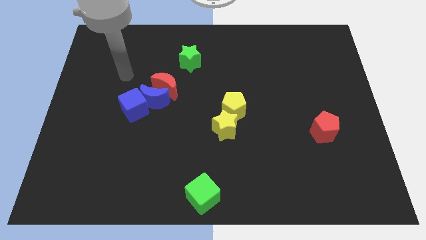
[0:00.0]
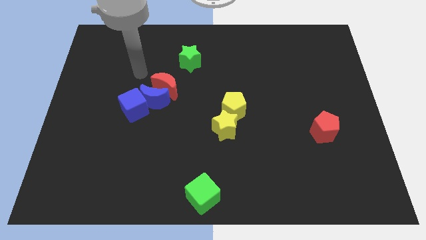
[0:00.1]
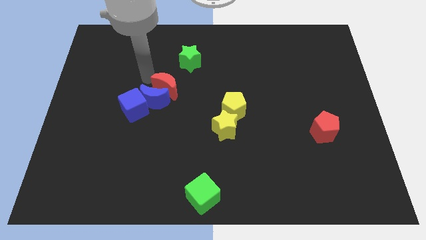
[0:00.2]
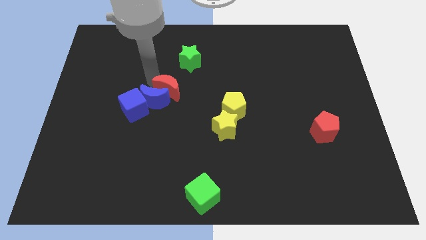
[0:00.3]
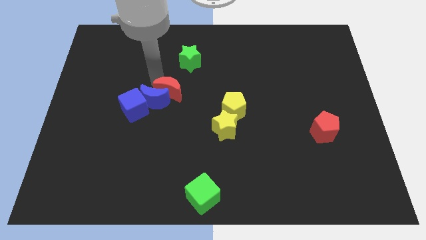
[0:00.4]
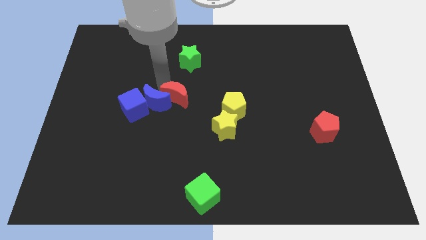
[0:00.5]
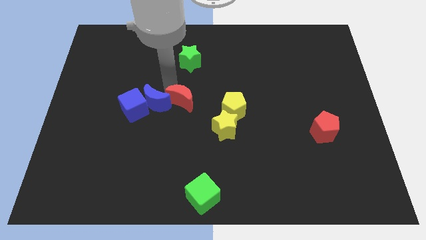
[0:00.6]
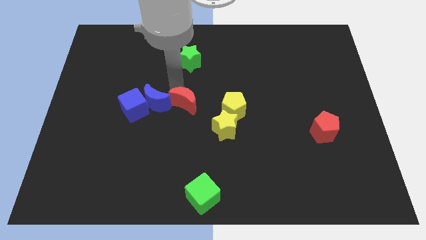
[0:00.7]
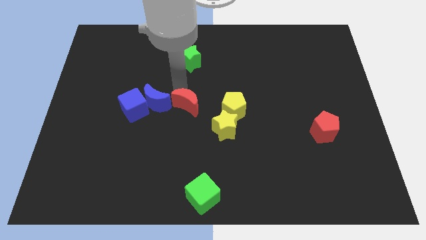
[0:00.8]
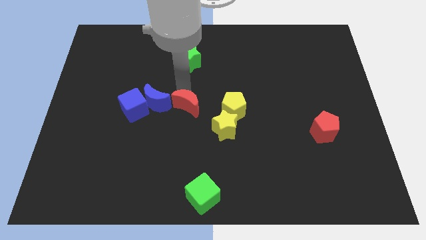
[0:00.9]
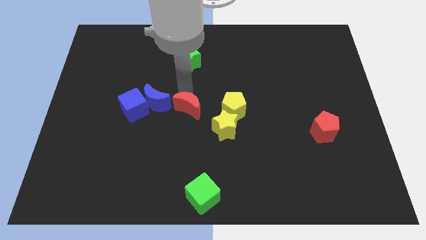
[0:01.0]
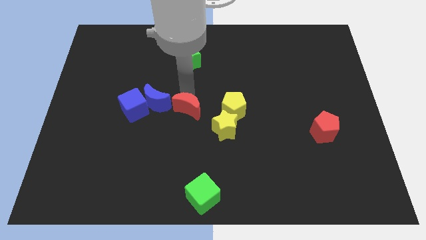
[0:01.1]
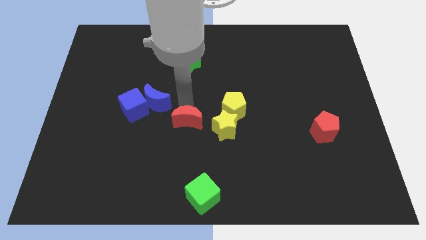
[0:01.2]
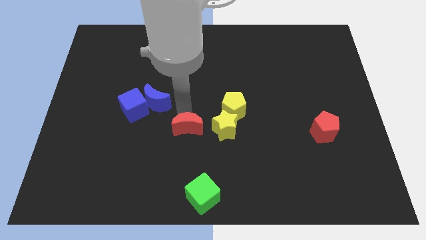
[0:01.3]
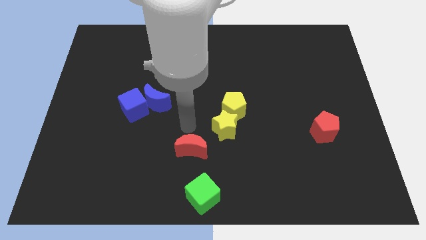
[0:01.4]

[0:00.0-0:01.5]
push the red crescent towards green cube

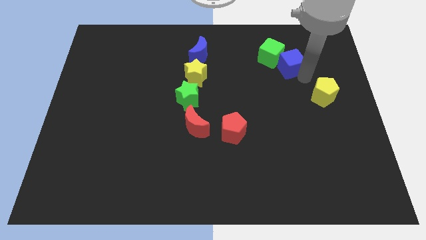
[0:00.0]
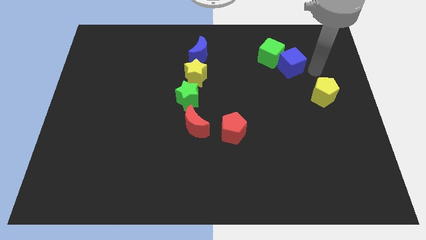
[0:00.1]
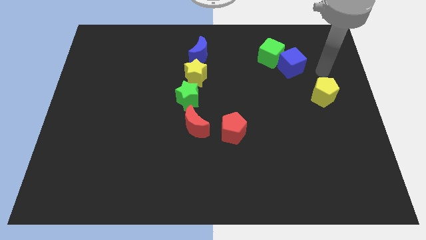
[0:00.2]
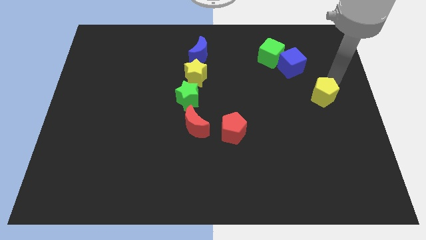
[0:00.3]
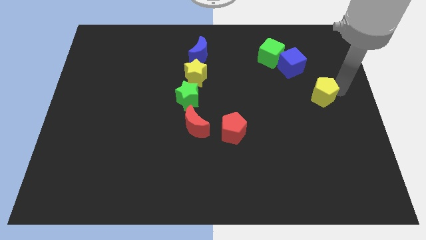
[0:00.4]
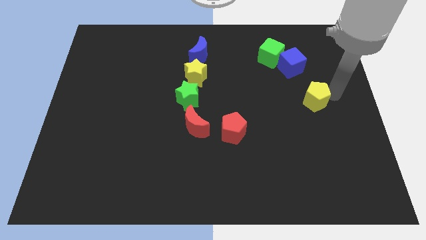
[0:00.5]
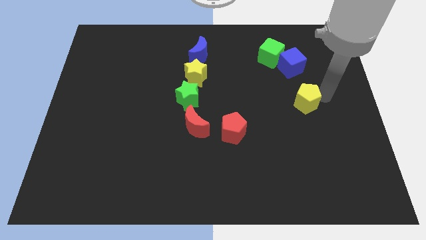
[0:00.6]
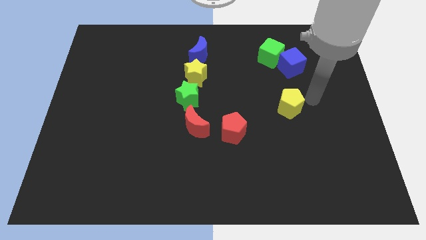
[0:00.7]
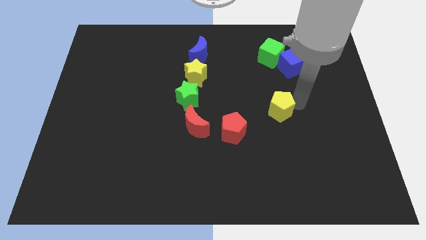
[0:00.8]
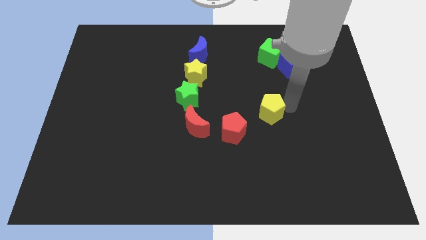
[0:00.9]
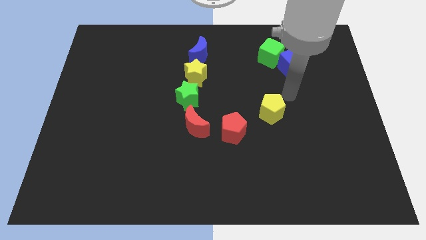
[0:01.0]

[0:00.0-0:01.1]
drag yellow pentagon slightly down to the top right of red pentagon

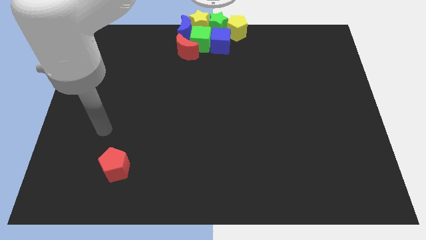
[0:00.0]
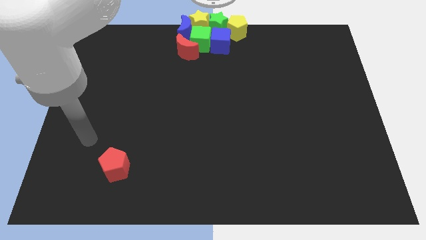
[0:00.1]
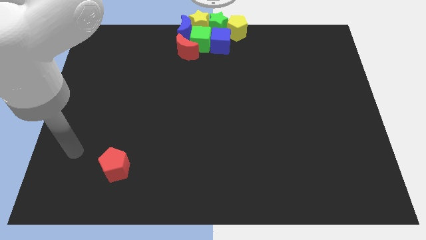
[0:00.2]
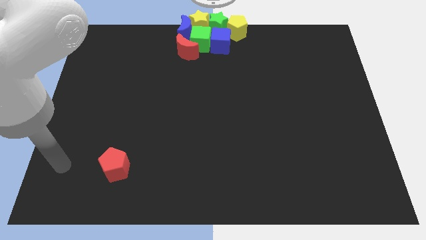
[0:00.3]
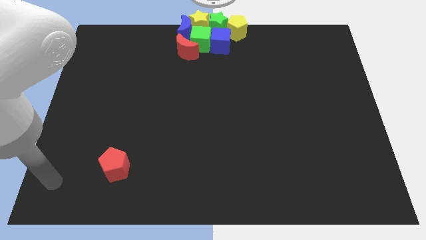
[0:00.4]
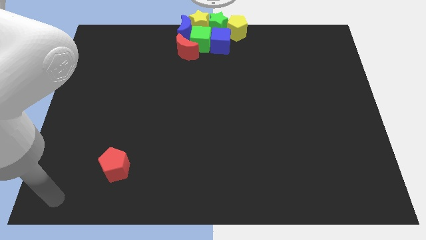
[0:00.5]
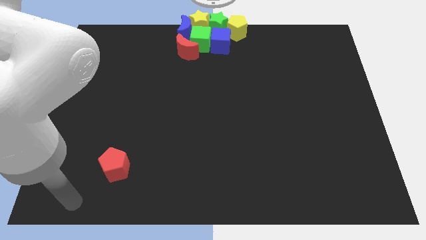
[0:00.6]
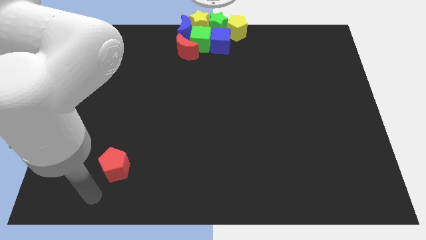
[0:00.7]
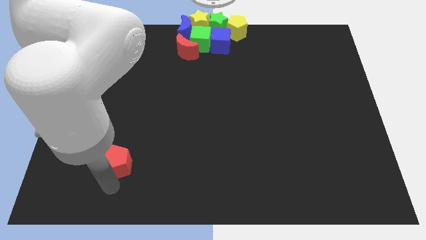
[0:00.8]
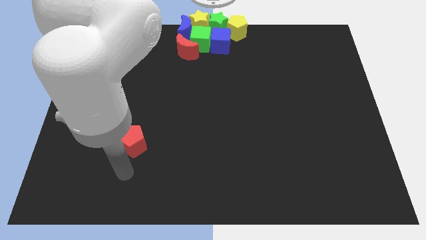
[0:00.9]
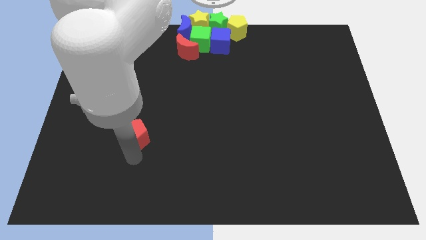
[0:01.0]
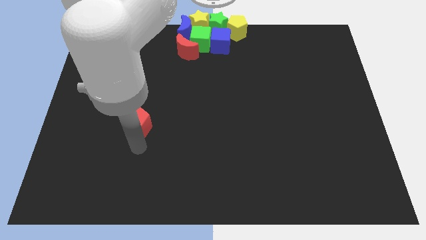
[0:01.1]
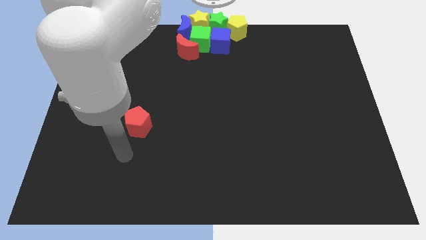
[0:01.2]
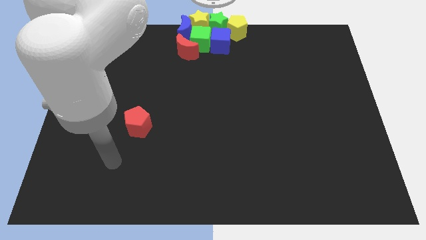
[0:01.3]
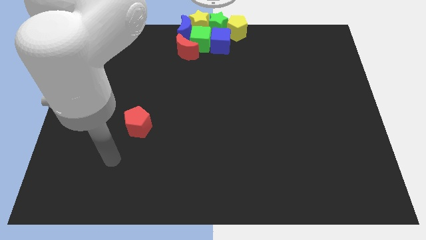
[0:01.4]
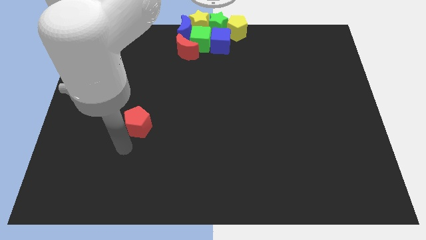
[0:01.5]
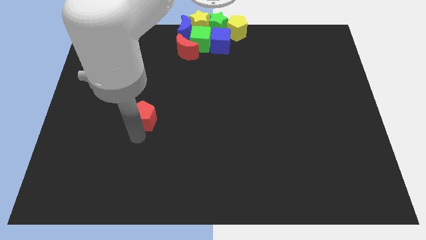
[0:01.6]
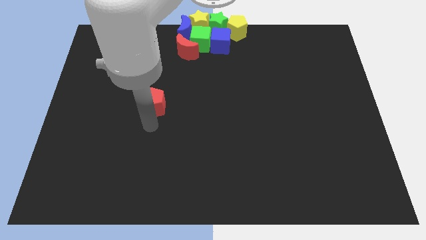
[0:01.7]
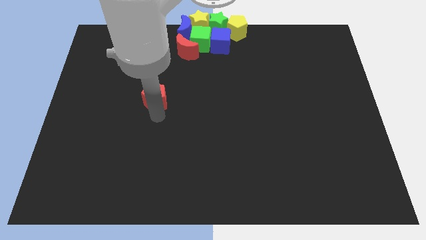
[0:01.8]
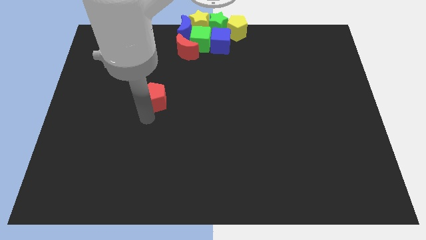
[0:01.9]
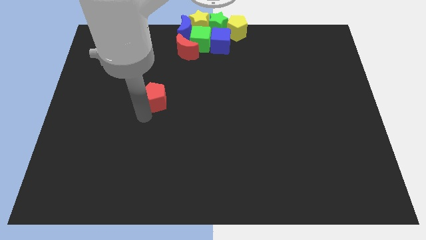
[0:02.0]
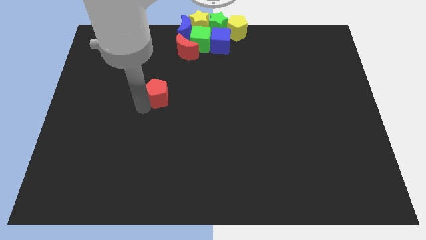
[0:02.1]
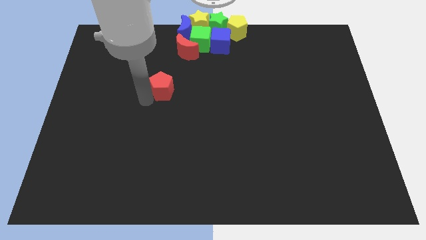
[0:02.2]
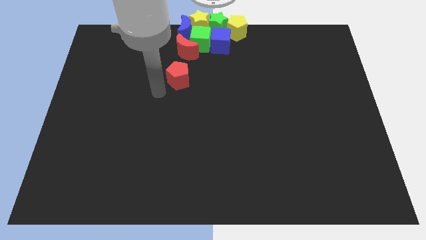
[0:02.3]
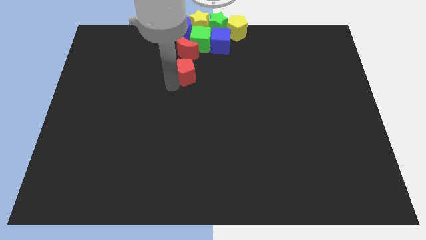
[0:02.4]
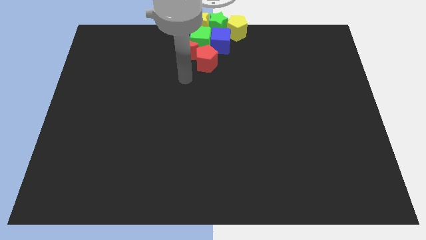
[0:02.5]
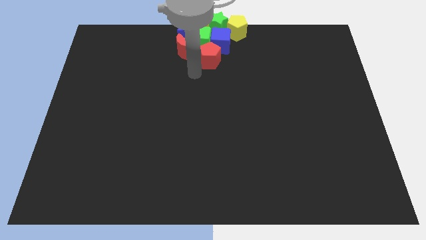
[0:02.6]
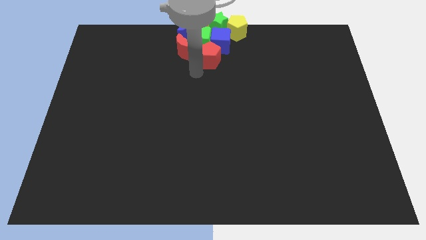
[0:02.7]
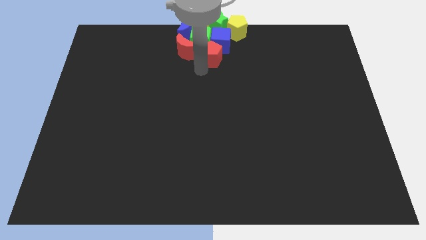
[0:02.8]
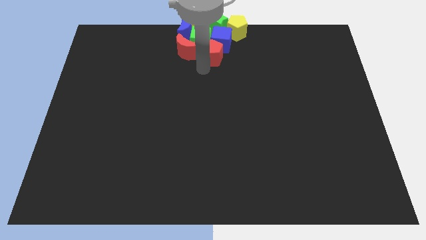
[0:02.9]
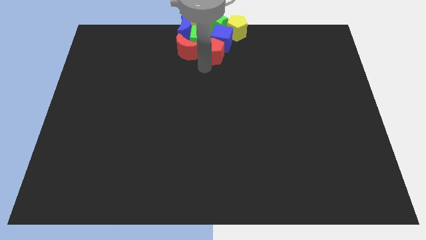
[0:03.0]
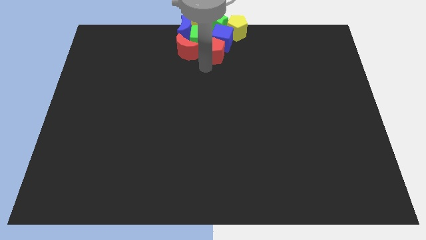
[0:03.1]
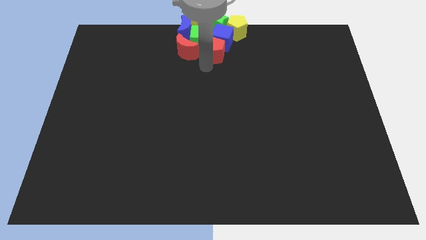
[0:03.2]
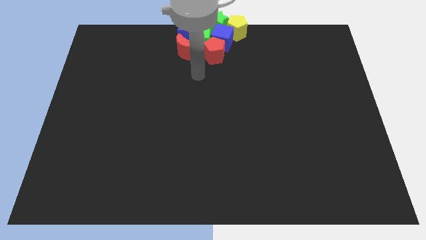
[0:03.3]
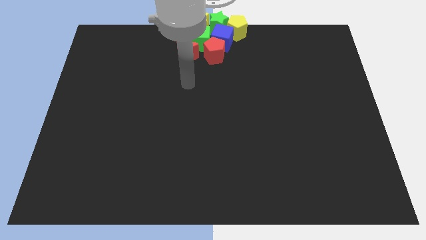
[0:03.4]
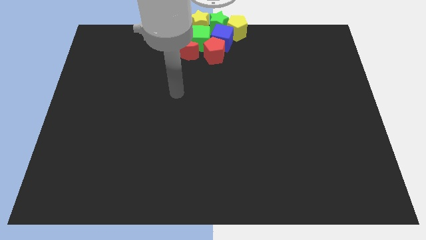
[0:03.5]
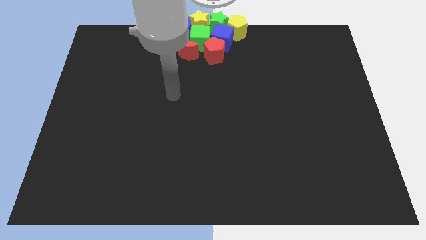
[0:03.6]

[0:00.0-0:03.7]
push the red pentagon to the right of the red crescent at the bottom of blue cube

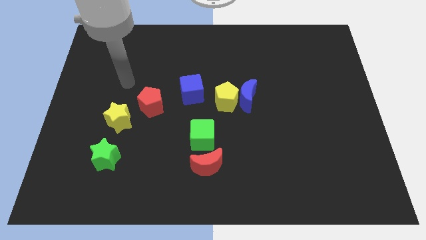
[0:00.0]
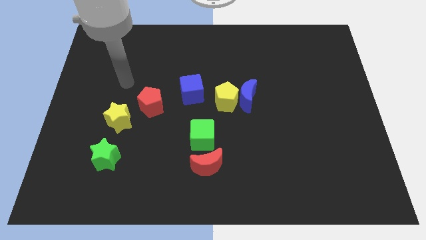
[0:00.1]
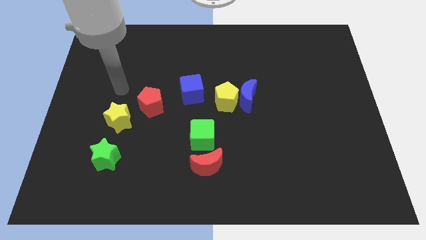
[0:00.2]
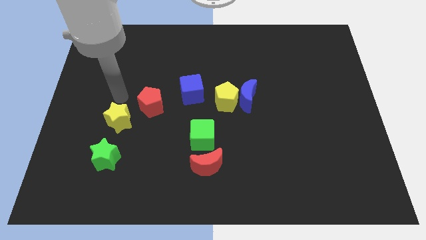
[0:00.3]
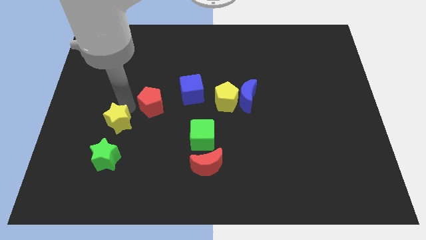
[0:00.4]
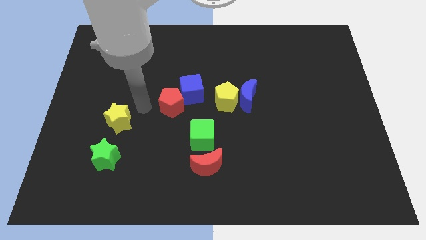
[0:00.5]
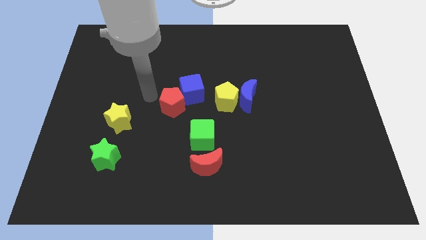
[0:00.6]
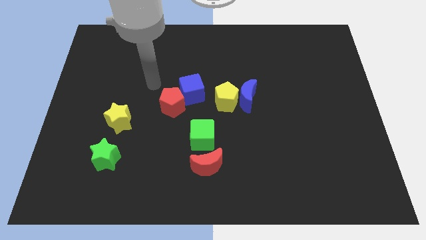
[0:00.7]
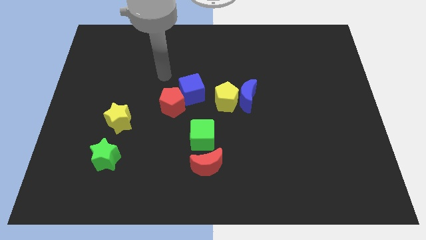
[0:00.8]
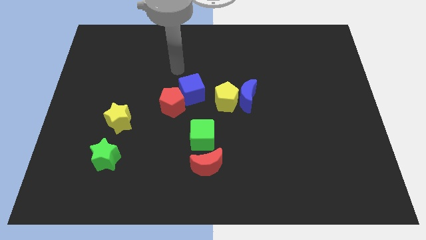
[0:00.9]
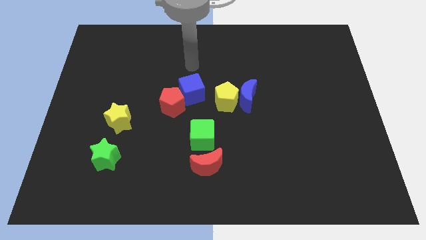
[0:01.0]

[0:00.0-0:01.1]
push the red pentagon into the blue cube

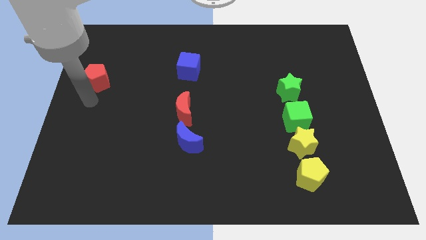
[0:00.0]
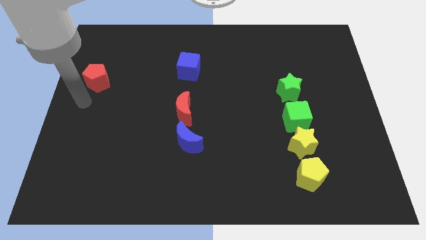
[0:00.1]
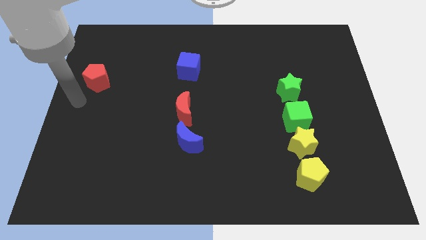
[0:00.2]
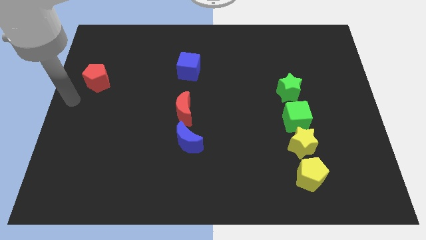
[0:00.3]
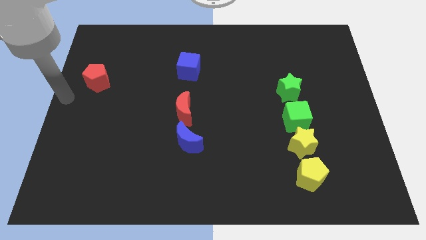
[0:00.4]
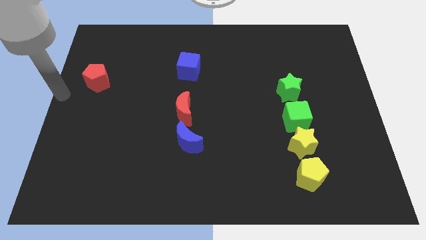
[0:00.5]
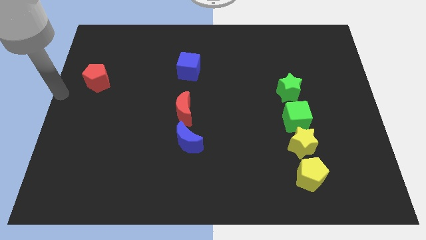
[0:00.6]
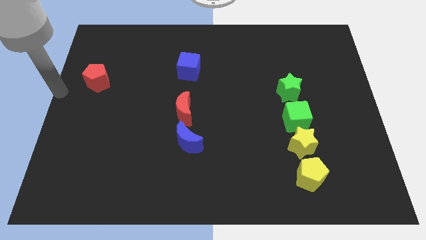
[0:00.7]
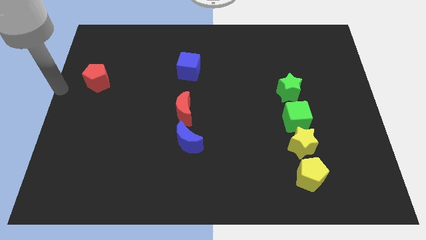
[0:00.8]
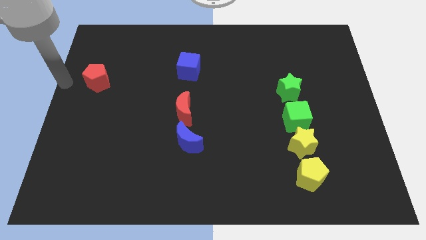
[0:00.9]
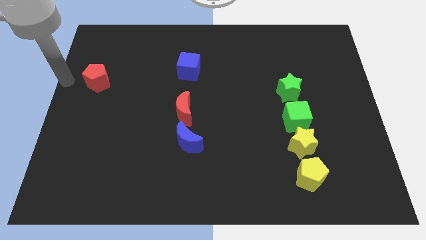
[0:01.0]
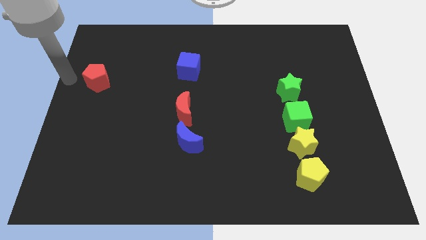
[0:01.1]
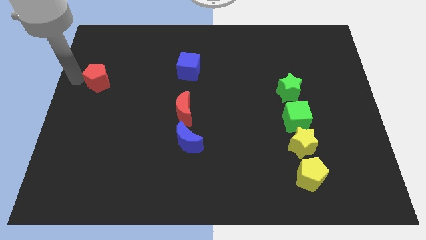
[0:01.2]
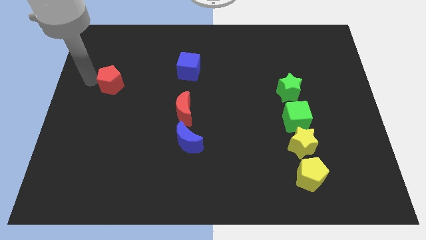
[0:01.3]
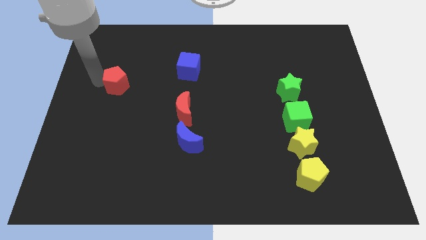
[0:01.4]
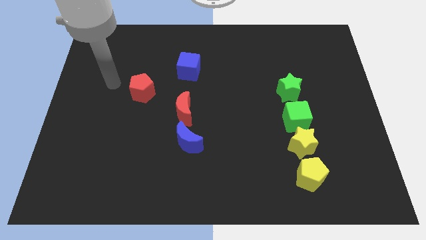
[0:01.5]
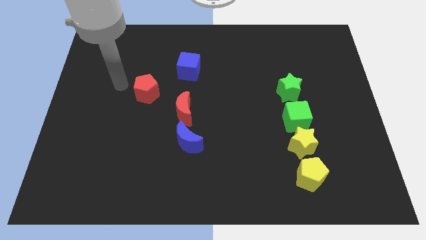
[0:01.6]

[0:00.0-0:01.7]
move the red pentagon to make triangle
